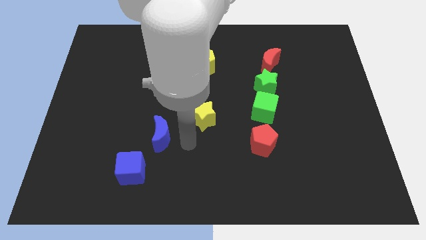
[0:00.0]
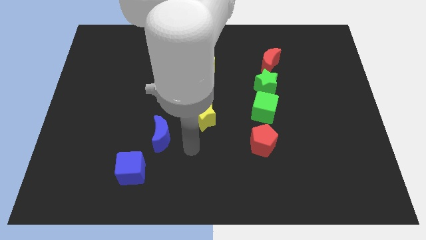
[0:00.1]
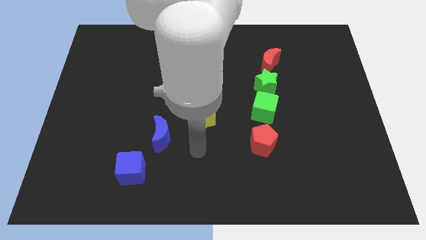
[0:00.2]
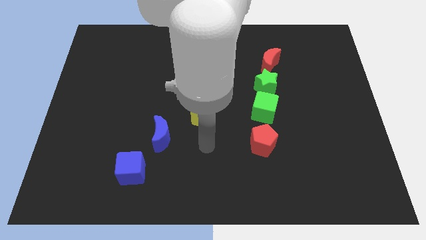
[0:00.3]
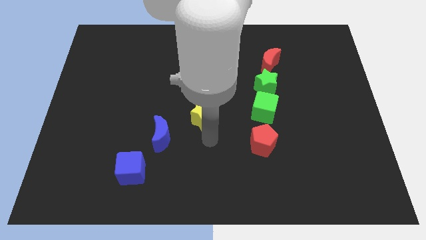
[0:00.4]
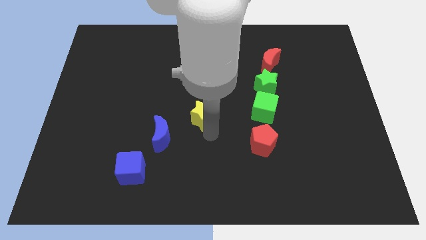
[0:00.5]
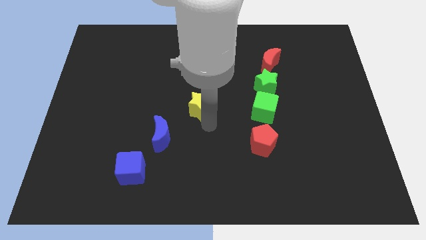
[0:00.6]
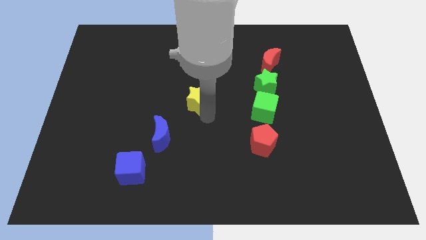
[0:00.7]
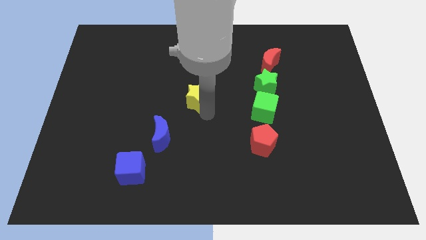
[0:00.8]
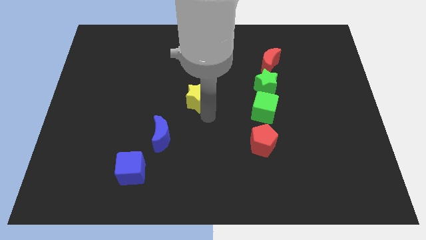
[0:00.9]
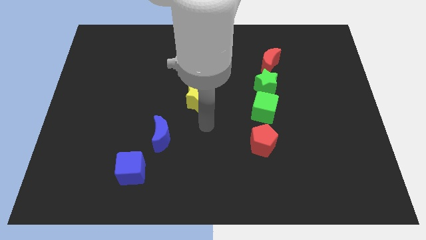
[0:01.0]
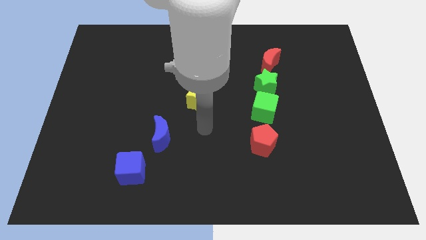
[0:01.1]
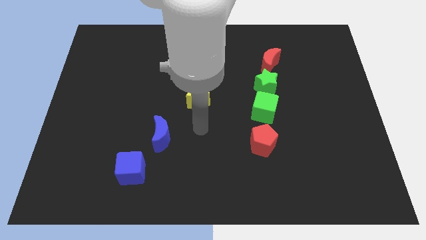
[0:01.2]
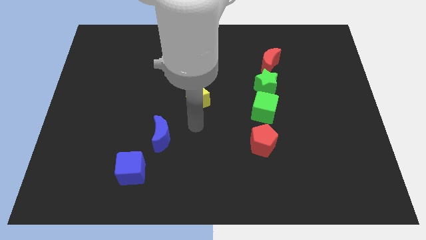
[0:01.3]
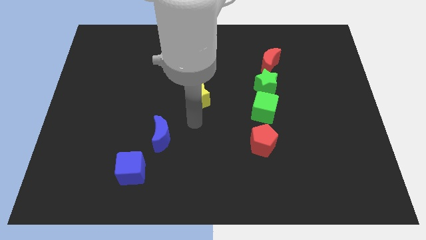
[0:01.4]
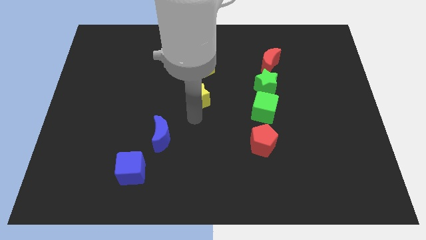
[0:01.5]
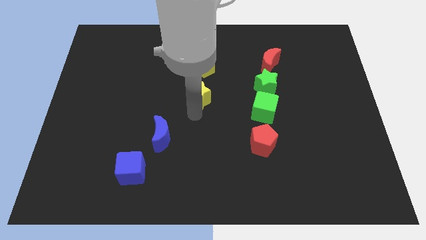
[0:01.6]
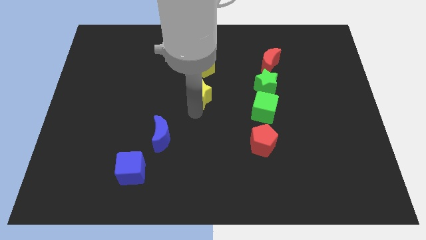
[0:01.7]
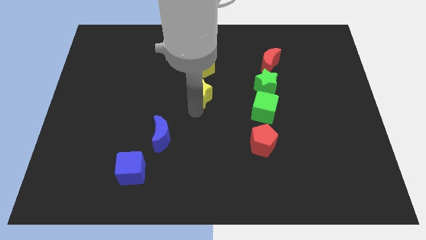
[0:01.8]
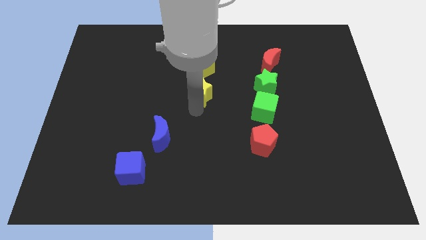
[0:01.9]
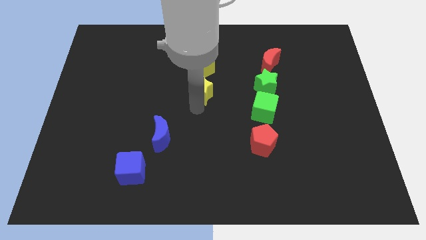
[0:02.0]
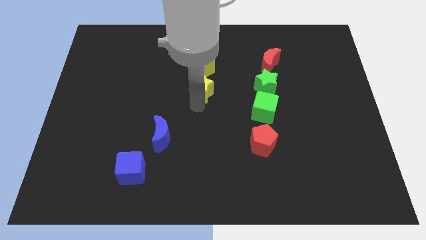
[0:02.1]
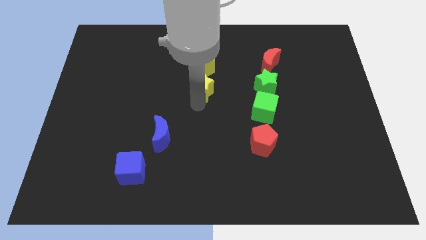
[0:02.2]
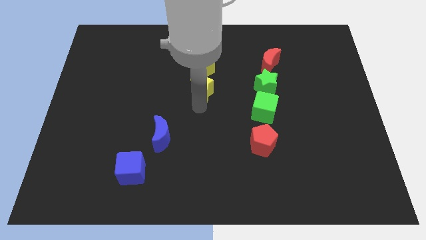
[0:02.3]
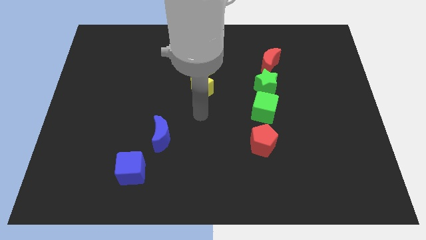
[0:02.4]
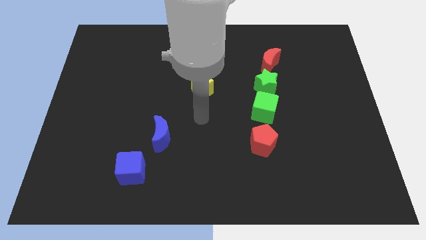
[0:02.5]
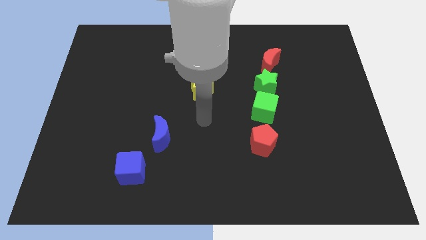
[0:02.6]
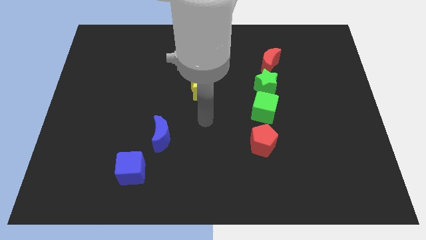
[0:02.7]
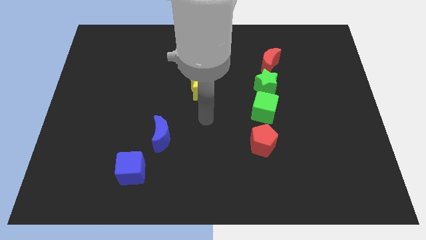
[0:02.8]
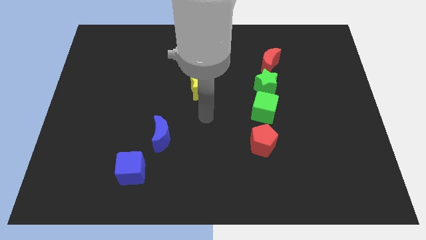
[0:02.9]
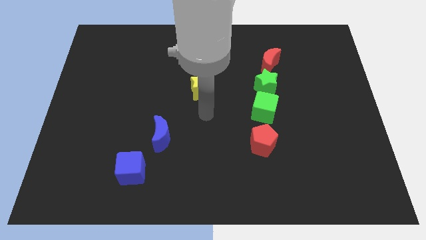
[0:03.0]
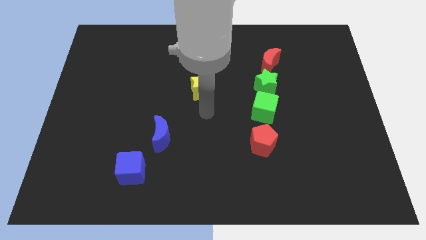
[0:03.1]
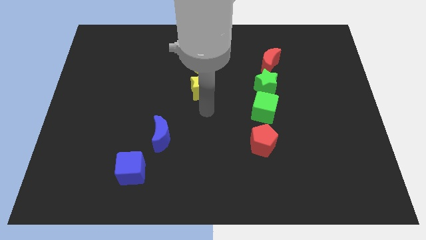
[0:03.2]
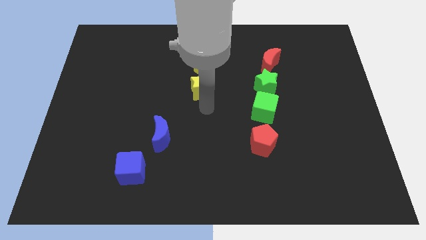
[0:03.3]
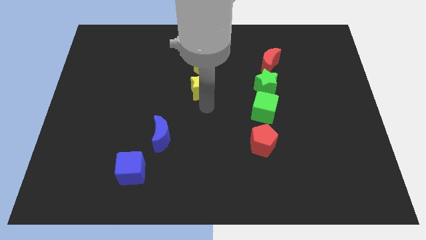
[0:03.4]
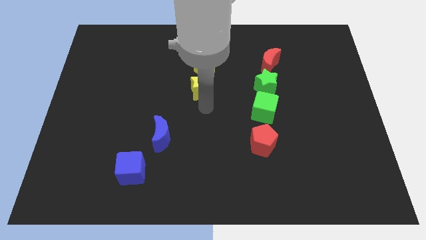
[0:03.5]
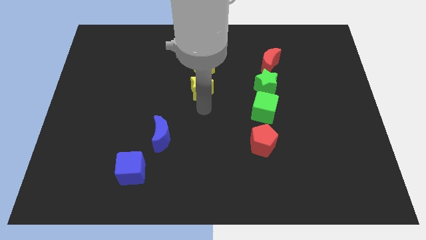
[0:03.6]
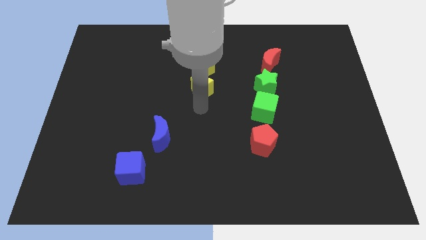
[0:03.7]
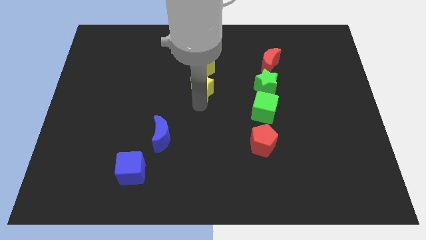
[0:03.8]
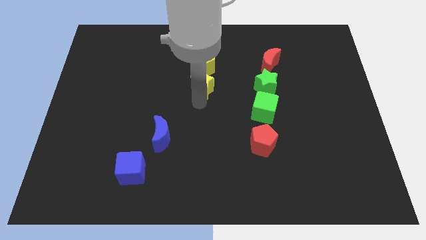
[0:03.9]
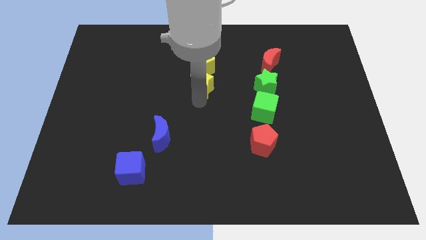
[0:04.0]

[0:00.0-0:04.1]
place the yellow star below the yellow pentagon

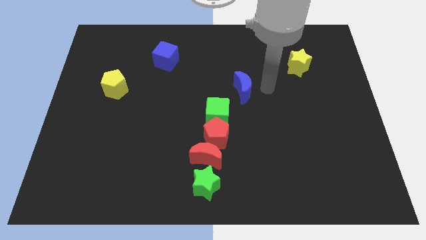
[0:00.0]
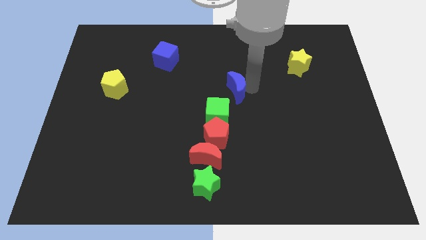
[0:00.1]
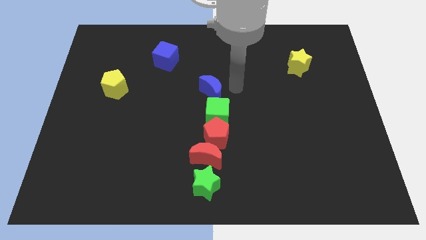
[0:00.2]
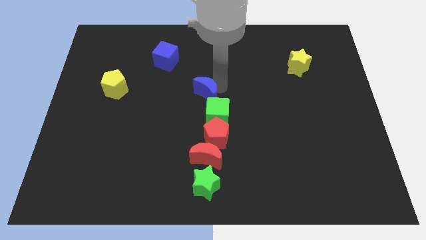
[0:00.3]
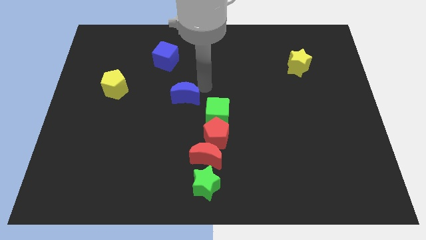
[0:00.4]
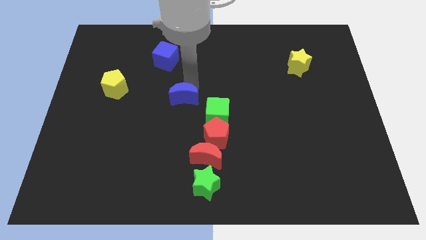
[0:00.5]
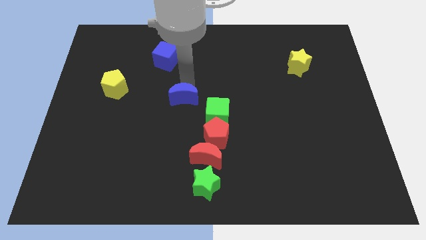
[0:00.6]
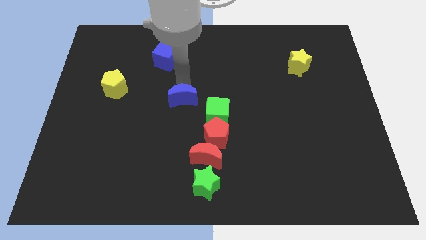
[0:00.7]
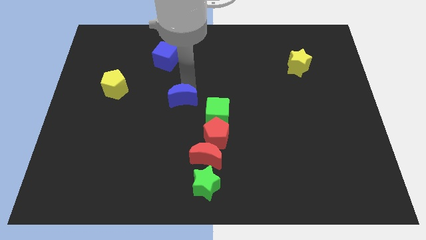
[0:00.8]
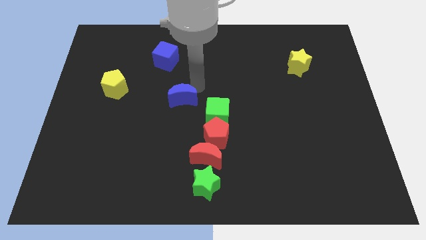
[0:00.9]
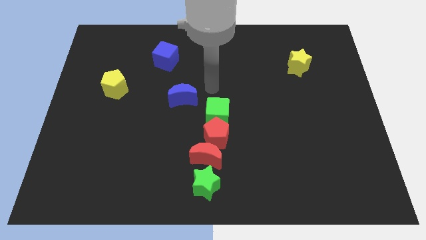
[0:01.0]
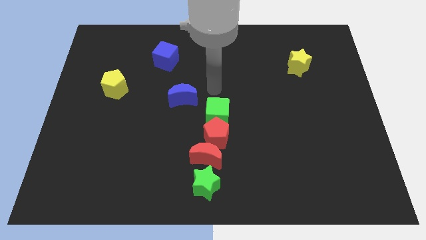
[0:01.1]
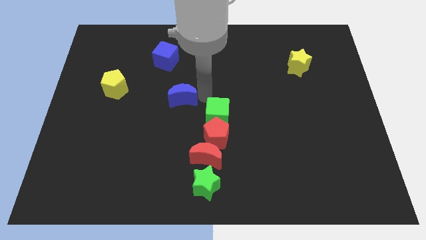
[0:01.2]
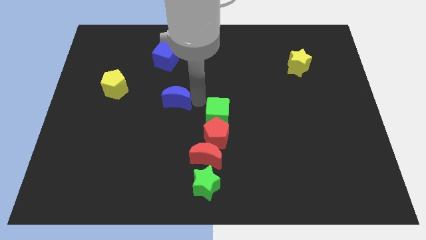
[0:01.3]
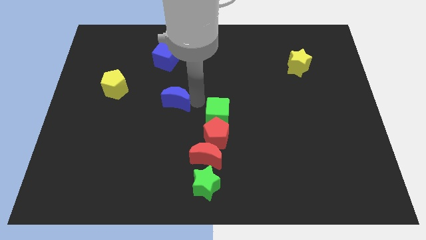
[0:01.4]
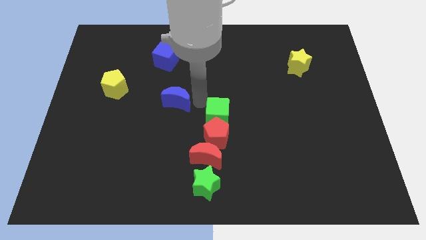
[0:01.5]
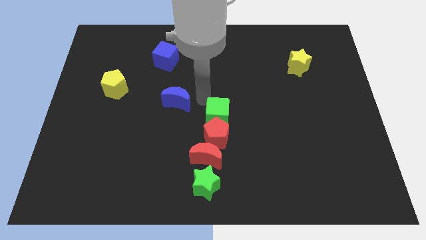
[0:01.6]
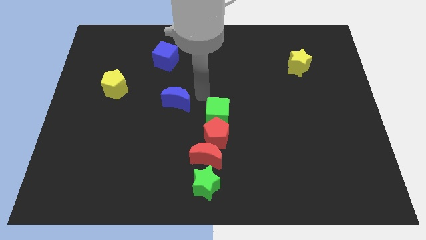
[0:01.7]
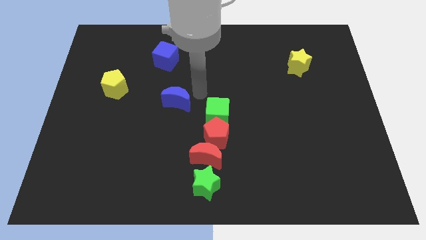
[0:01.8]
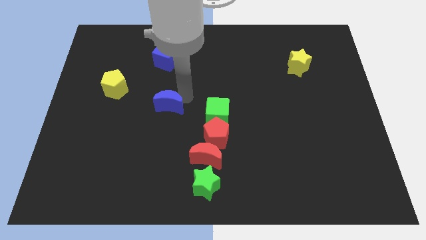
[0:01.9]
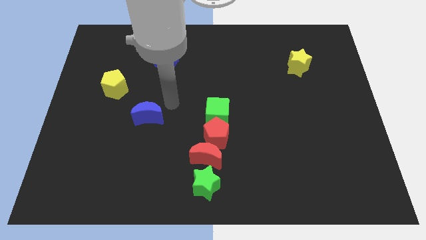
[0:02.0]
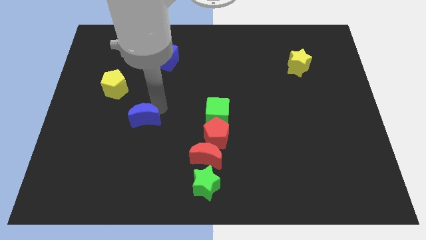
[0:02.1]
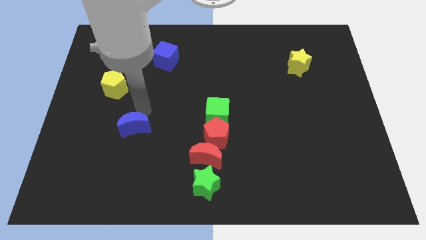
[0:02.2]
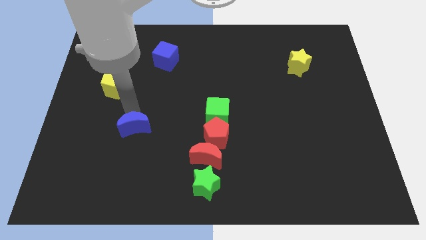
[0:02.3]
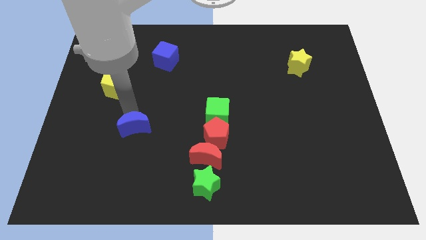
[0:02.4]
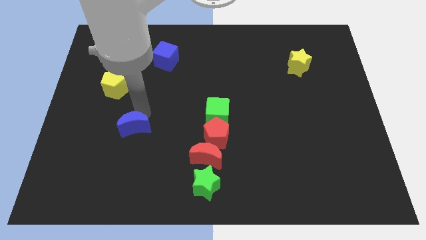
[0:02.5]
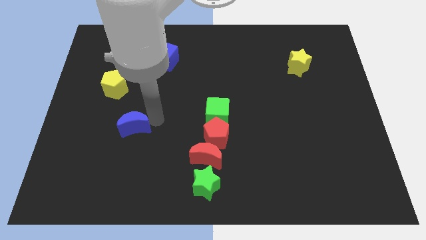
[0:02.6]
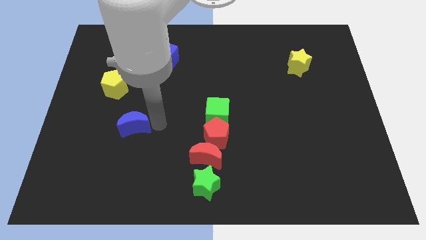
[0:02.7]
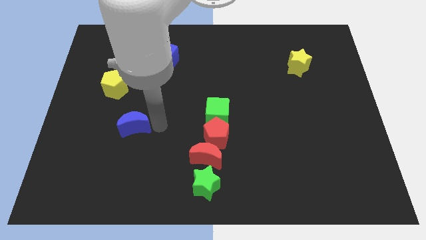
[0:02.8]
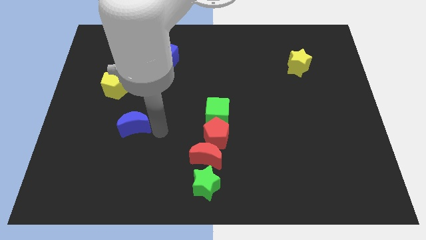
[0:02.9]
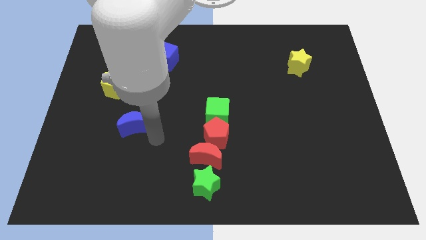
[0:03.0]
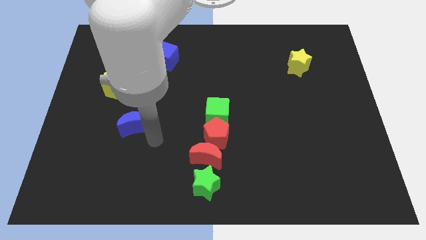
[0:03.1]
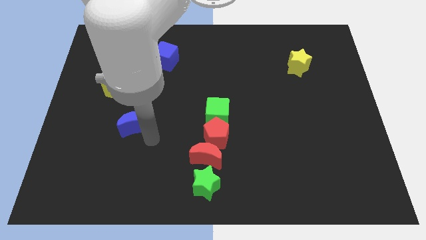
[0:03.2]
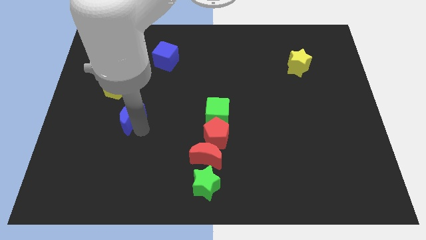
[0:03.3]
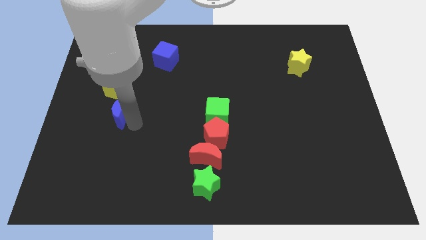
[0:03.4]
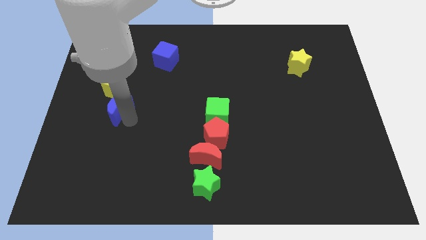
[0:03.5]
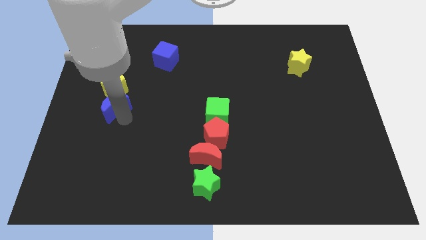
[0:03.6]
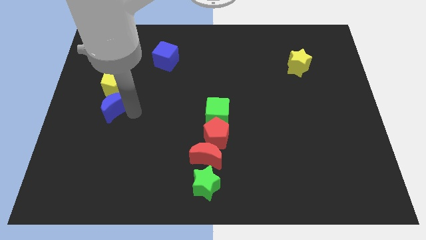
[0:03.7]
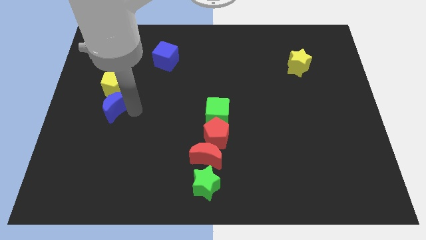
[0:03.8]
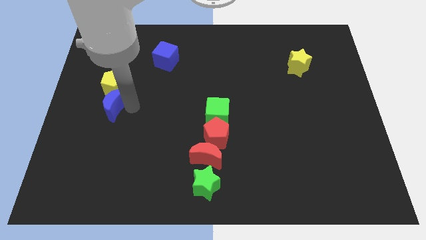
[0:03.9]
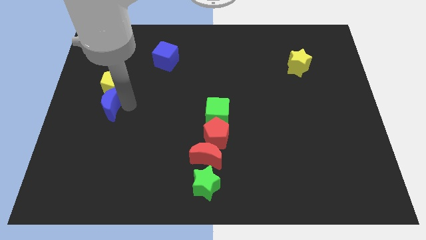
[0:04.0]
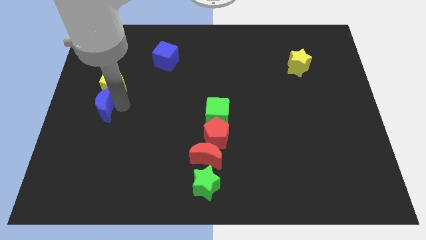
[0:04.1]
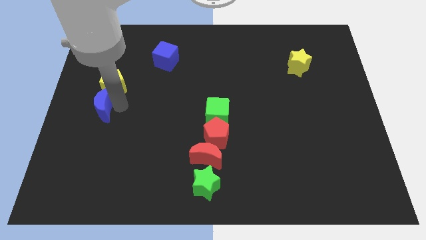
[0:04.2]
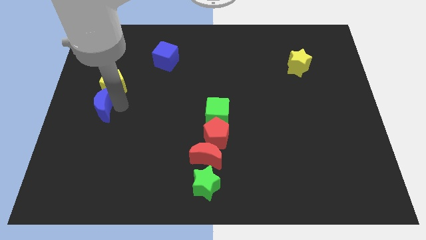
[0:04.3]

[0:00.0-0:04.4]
move the blue crescent below the yellow pentagon

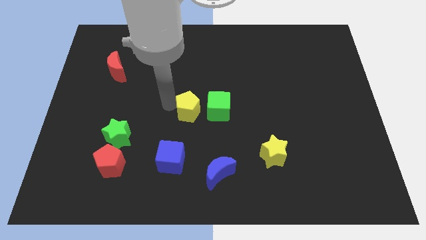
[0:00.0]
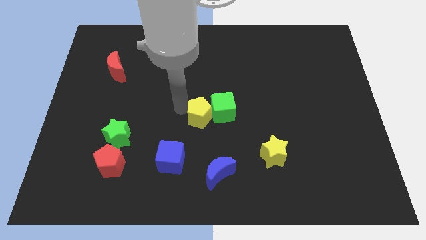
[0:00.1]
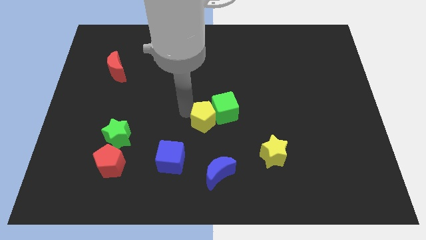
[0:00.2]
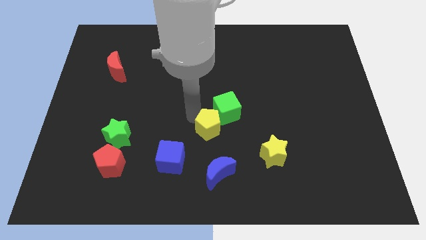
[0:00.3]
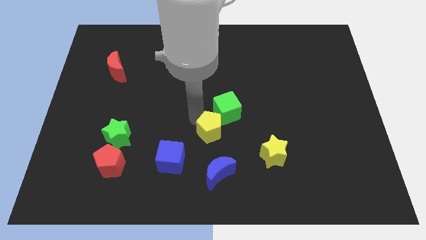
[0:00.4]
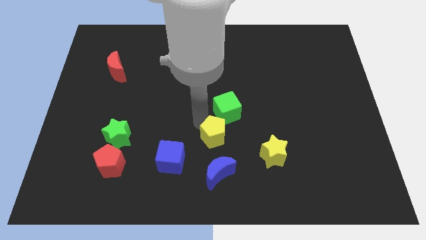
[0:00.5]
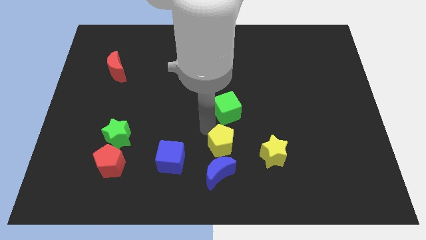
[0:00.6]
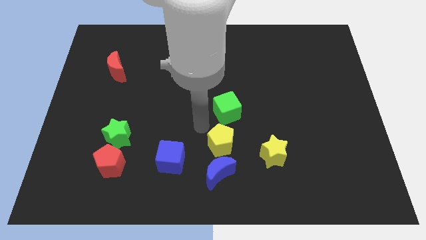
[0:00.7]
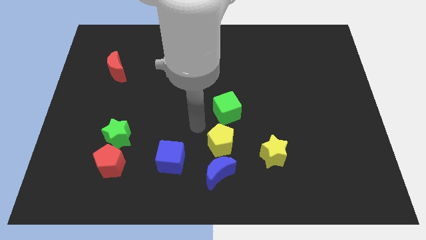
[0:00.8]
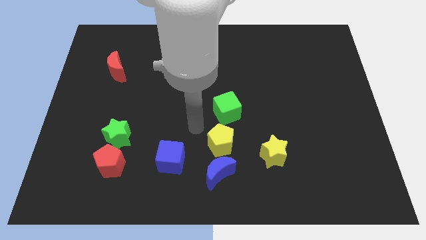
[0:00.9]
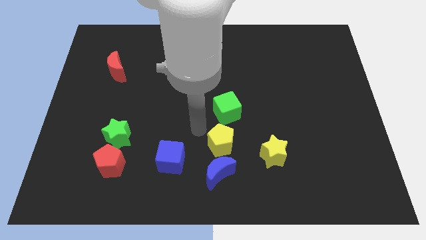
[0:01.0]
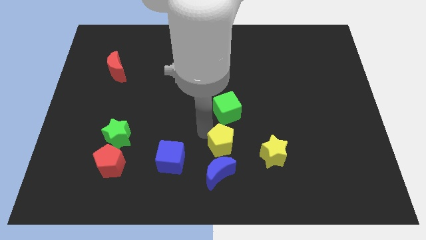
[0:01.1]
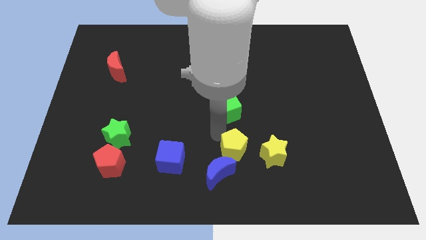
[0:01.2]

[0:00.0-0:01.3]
place the yellow pentagon in between the blue moon and green cube
